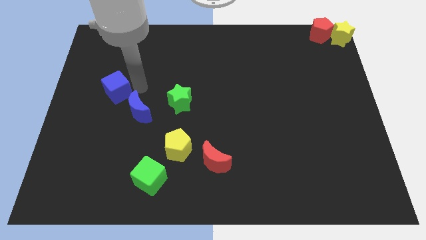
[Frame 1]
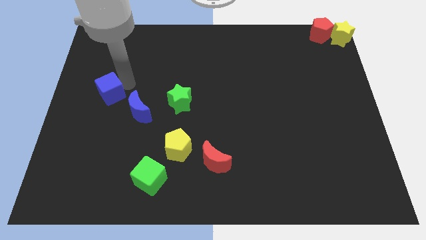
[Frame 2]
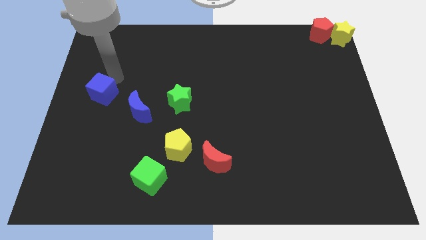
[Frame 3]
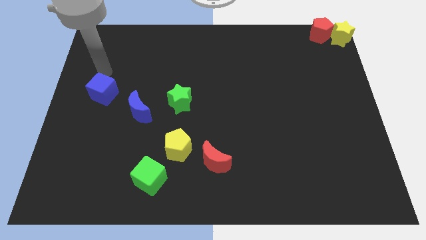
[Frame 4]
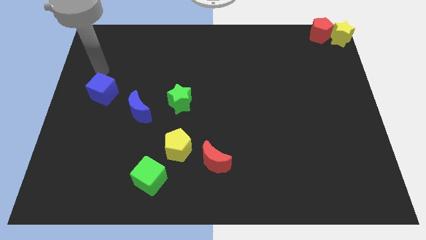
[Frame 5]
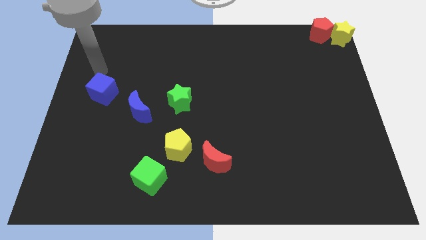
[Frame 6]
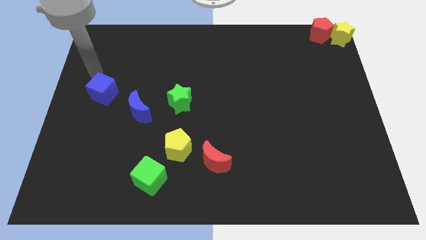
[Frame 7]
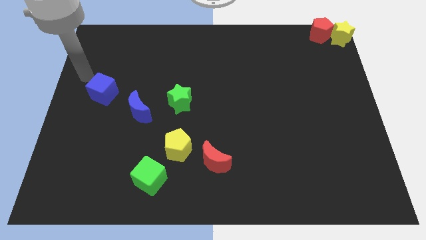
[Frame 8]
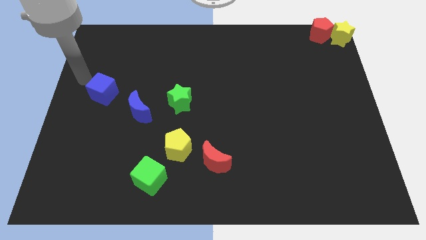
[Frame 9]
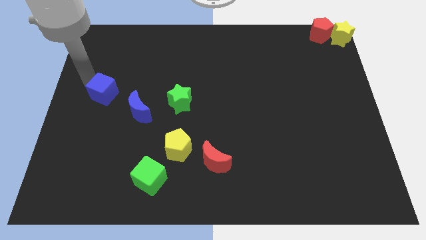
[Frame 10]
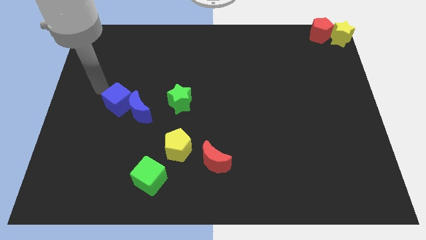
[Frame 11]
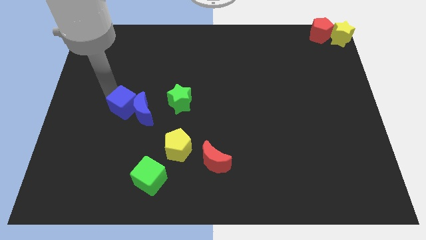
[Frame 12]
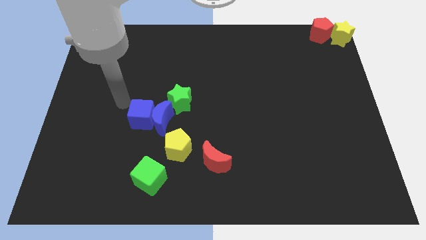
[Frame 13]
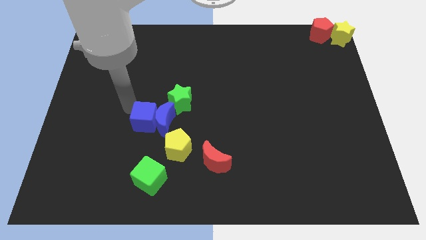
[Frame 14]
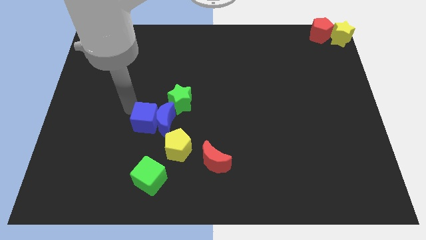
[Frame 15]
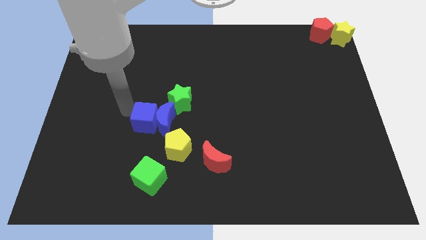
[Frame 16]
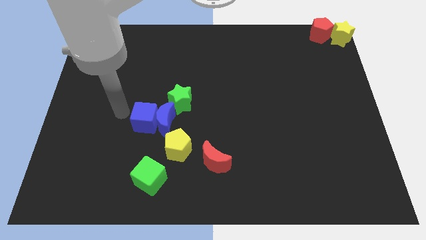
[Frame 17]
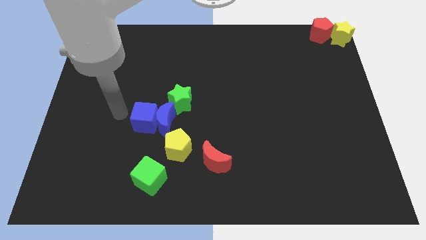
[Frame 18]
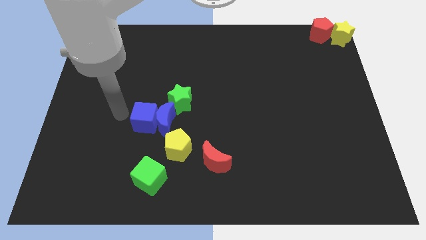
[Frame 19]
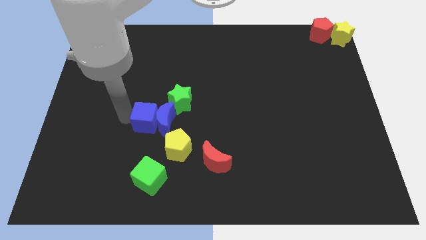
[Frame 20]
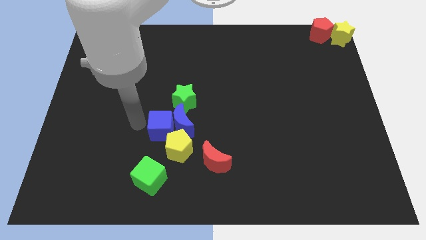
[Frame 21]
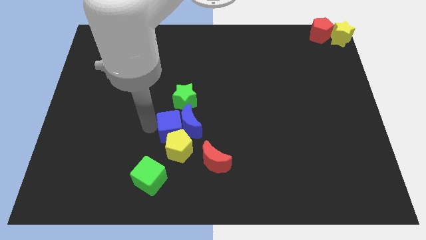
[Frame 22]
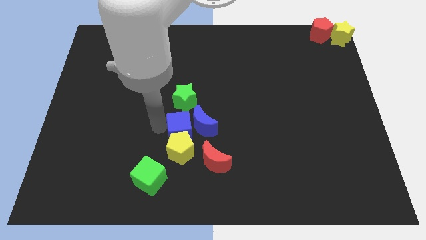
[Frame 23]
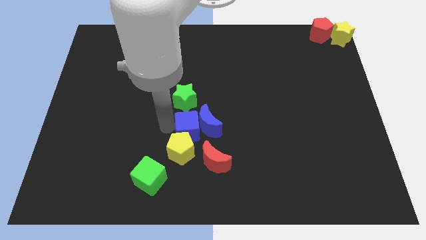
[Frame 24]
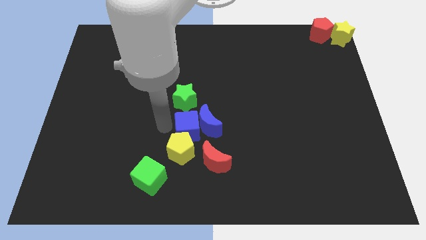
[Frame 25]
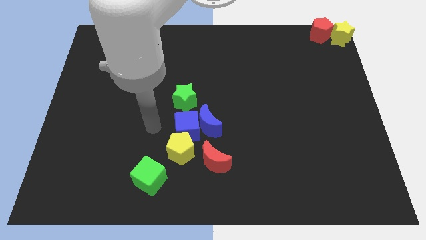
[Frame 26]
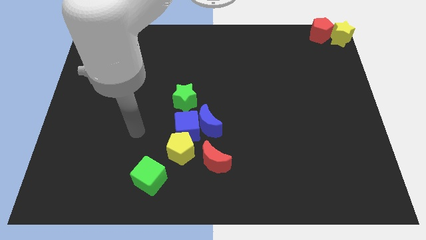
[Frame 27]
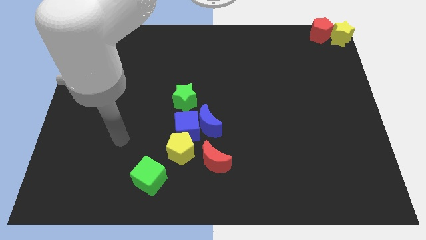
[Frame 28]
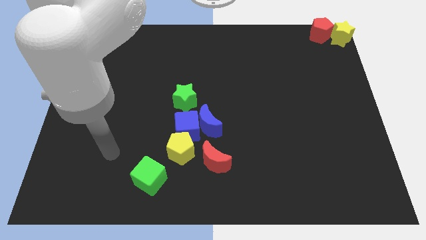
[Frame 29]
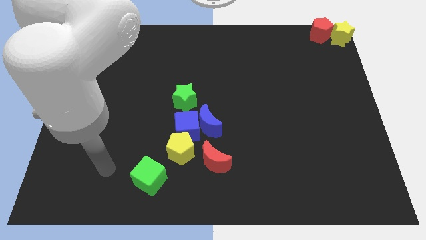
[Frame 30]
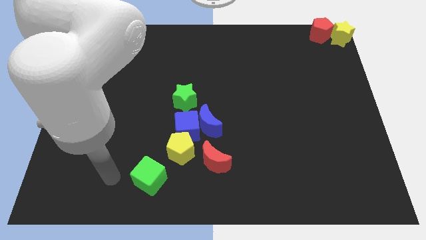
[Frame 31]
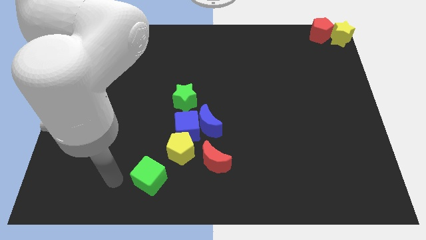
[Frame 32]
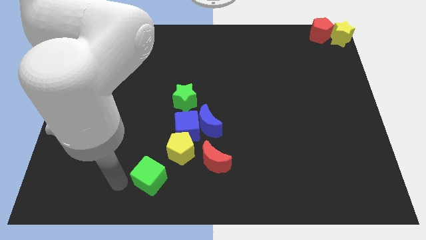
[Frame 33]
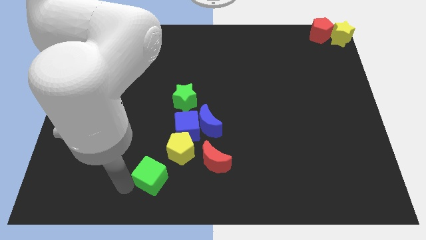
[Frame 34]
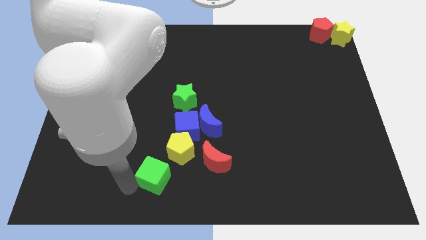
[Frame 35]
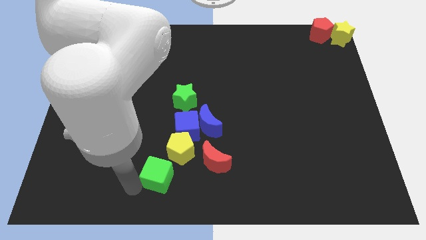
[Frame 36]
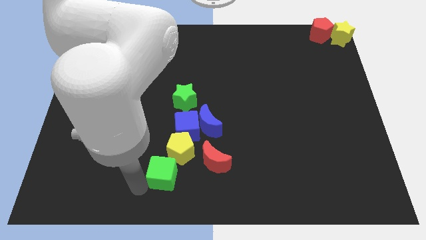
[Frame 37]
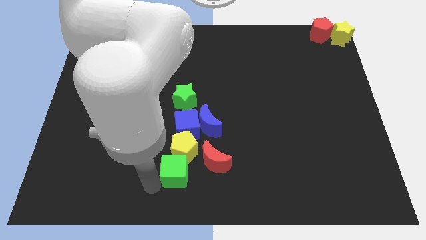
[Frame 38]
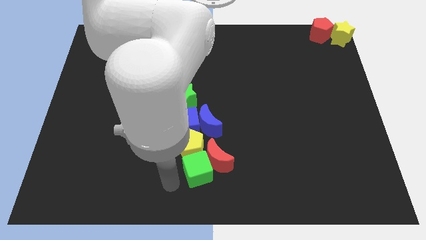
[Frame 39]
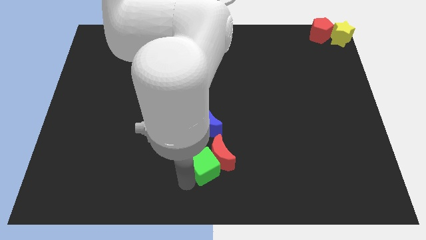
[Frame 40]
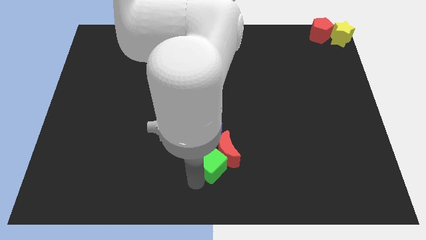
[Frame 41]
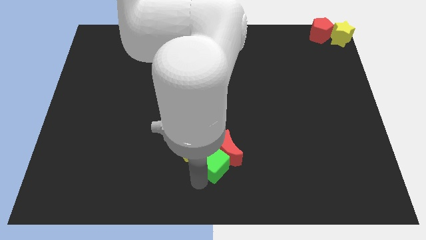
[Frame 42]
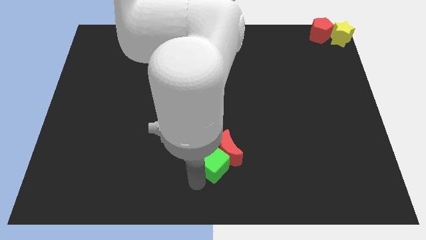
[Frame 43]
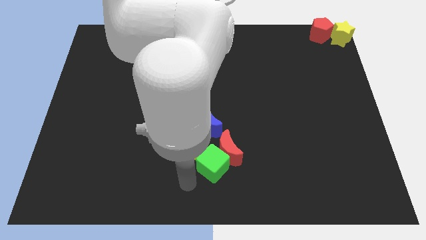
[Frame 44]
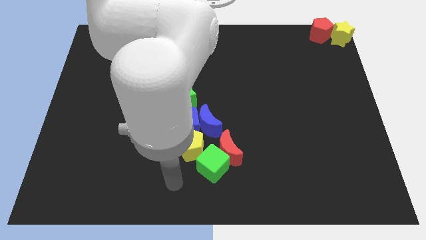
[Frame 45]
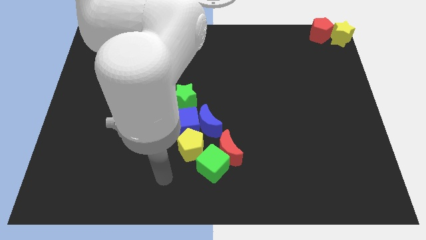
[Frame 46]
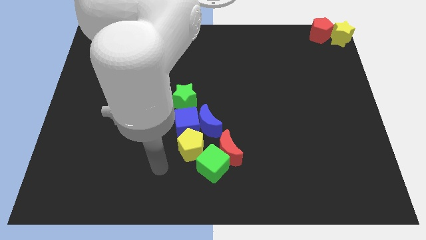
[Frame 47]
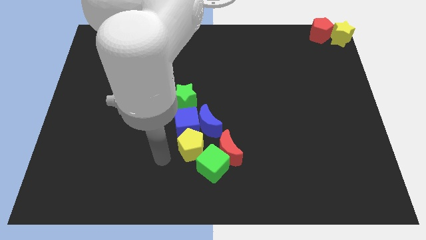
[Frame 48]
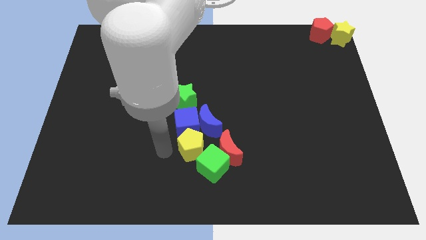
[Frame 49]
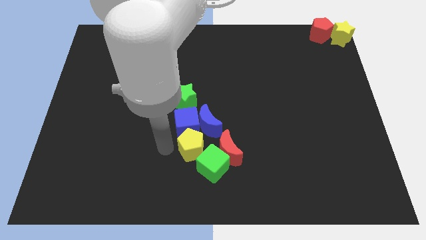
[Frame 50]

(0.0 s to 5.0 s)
push the group of objects towards the center of the board

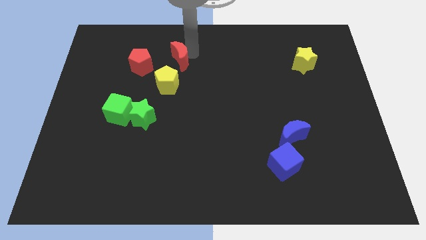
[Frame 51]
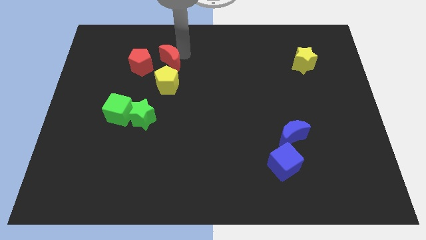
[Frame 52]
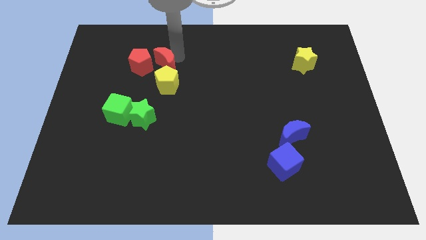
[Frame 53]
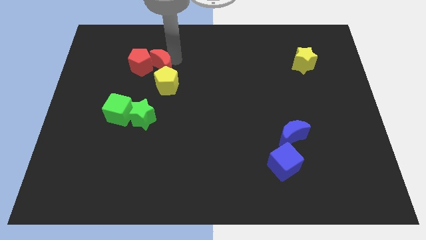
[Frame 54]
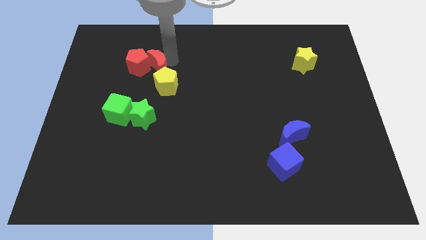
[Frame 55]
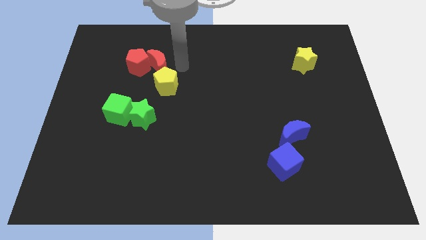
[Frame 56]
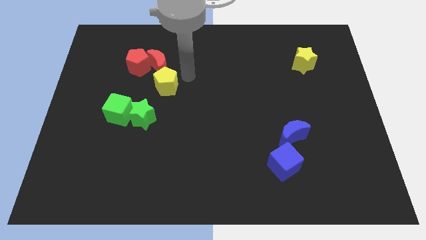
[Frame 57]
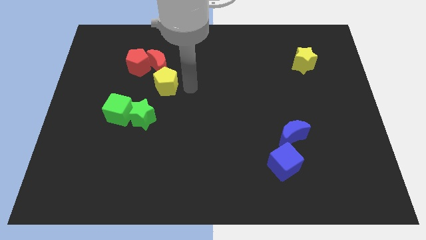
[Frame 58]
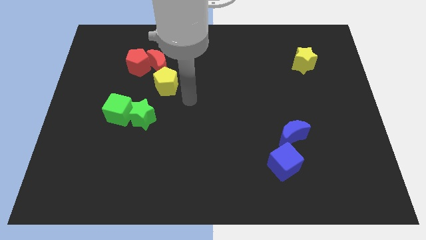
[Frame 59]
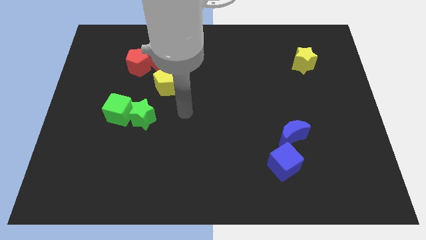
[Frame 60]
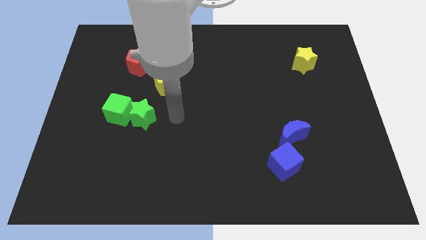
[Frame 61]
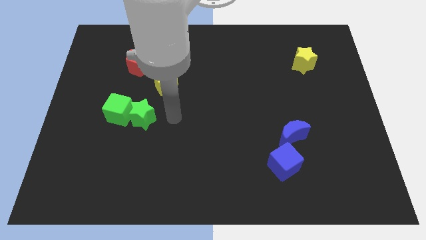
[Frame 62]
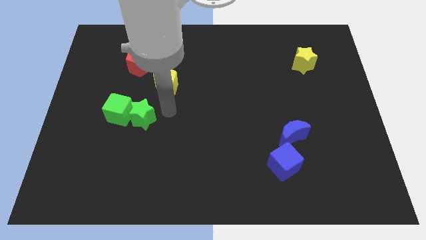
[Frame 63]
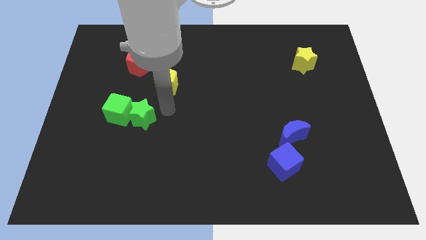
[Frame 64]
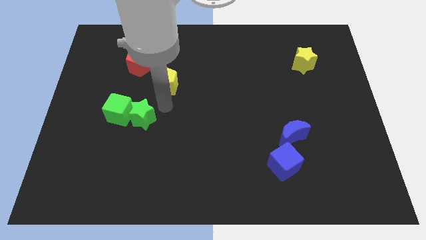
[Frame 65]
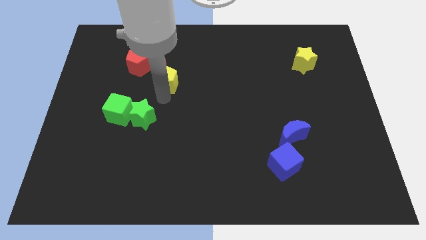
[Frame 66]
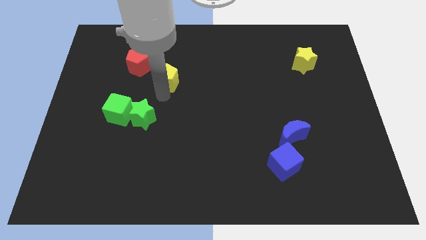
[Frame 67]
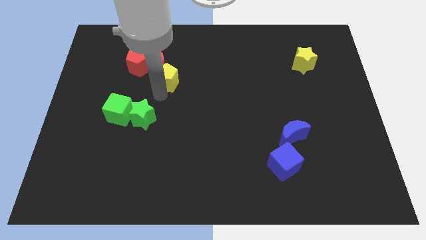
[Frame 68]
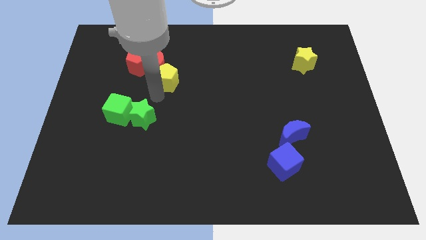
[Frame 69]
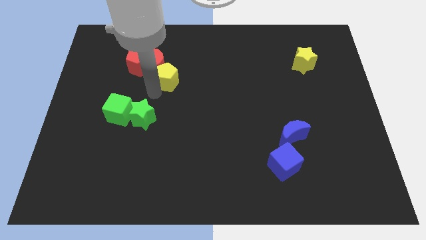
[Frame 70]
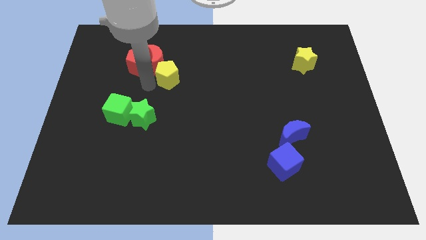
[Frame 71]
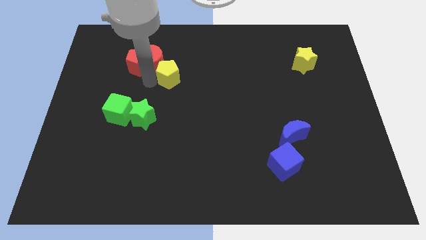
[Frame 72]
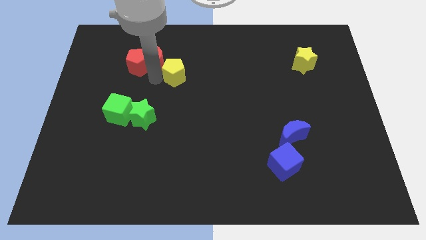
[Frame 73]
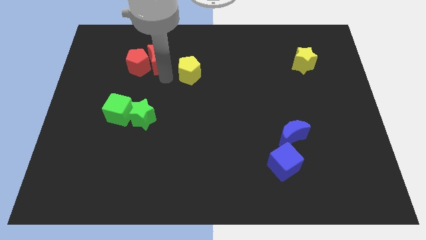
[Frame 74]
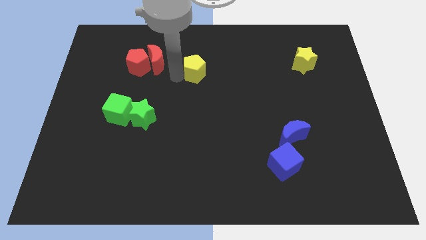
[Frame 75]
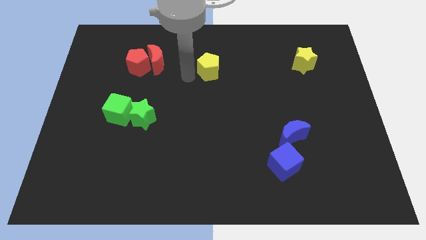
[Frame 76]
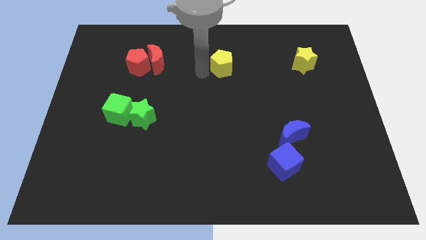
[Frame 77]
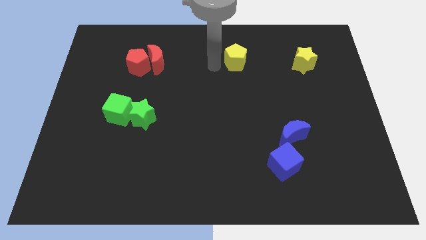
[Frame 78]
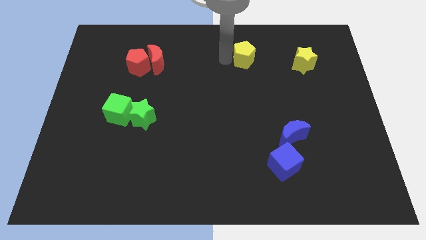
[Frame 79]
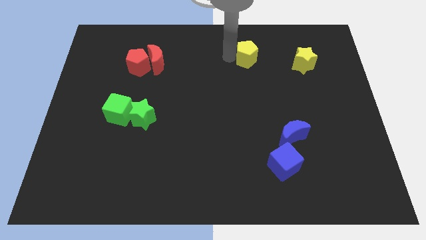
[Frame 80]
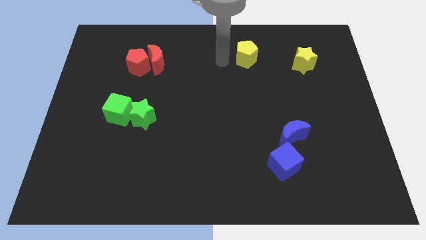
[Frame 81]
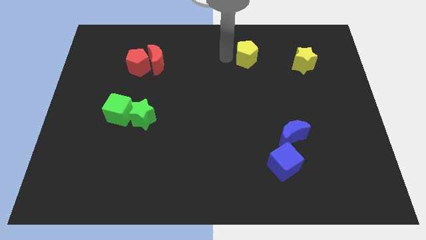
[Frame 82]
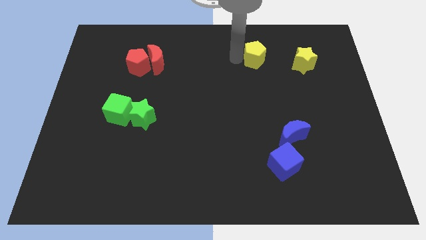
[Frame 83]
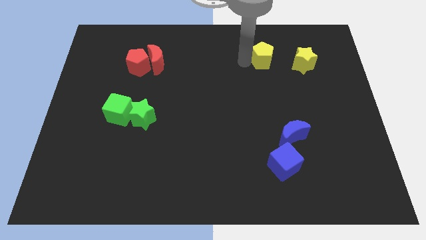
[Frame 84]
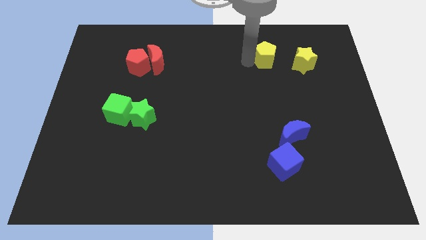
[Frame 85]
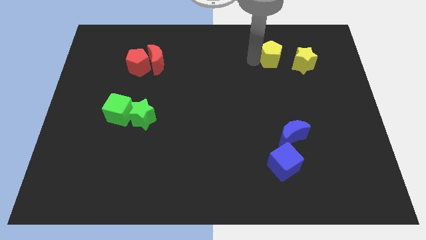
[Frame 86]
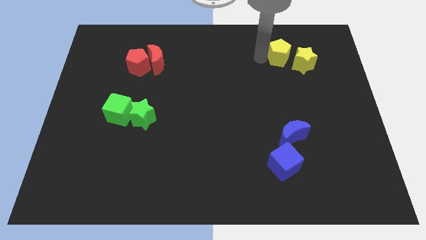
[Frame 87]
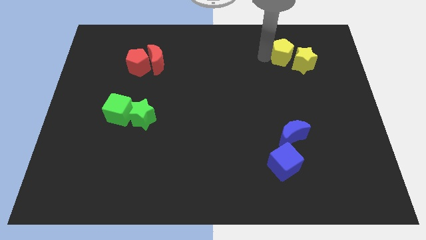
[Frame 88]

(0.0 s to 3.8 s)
slide the yellow pentagon close to the yellow star

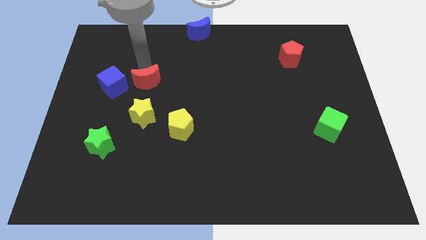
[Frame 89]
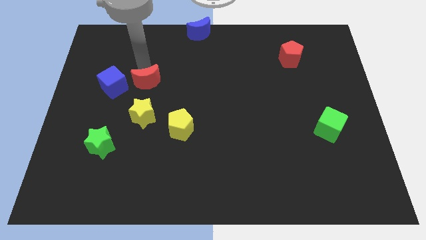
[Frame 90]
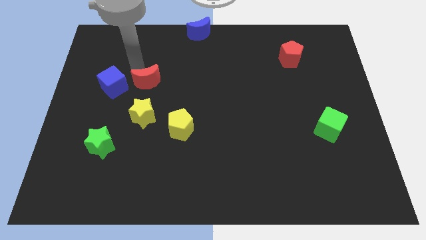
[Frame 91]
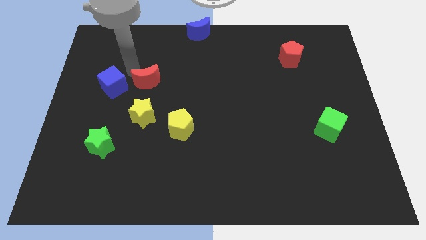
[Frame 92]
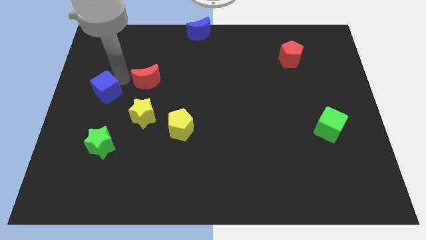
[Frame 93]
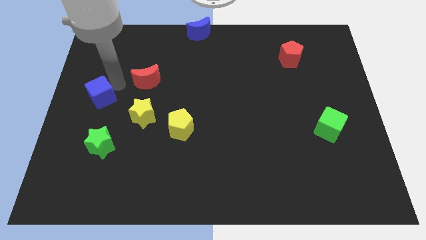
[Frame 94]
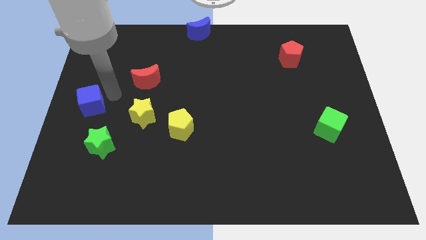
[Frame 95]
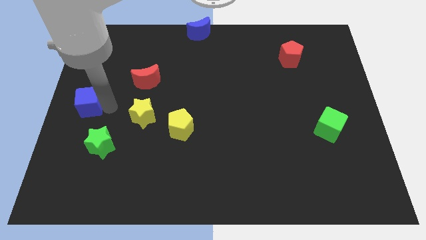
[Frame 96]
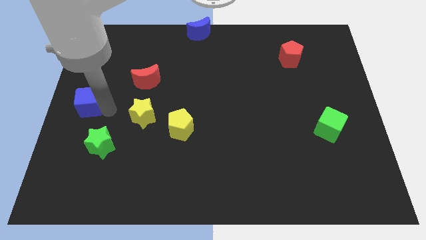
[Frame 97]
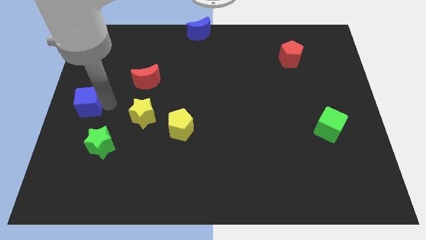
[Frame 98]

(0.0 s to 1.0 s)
place blue cube to the top of green star
